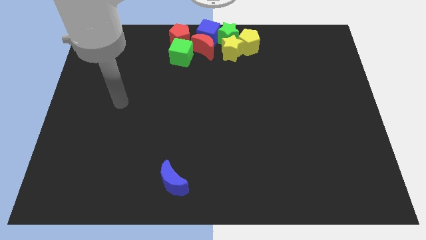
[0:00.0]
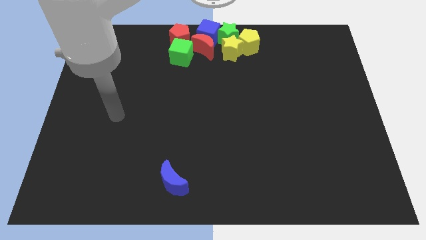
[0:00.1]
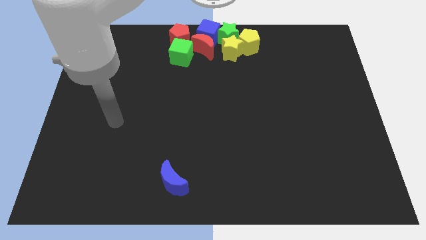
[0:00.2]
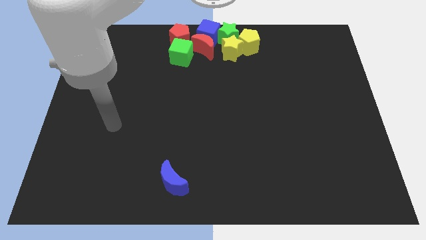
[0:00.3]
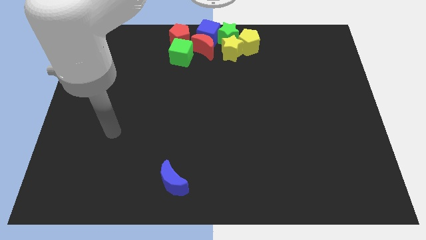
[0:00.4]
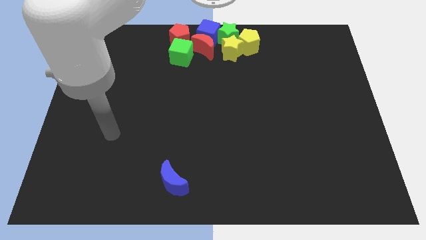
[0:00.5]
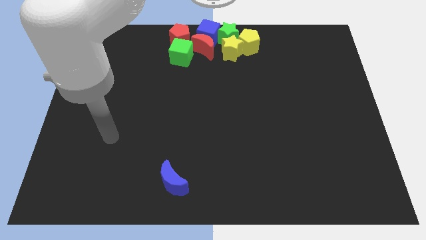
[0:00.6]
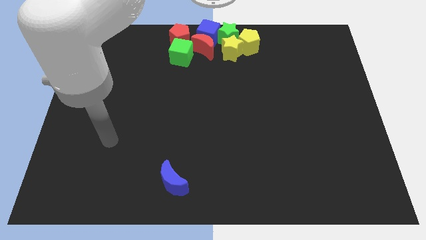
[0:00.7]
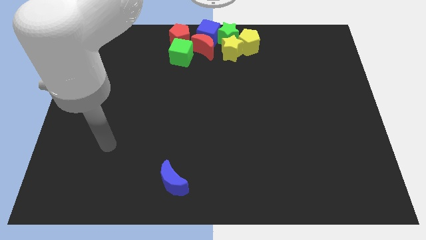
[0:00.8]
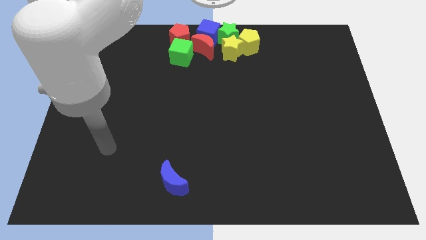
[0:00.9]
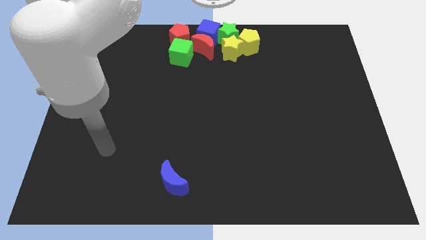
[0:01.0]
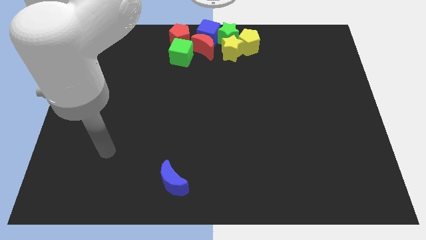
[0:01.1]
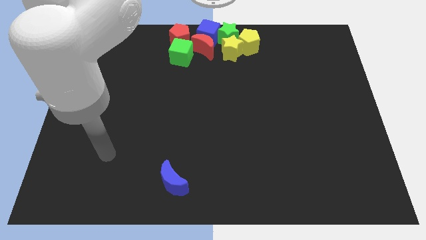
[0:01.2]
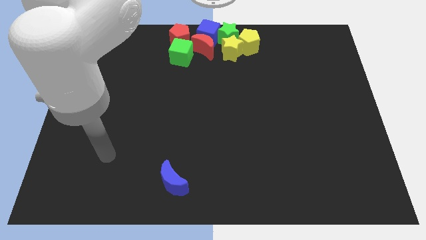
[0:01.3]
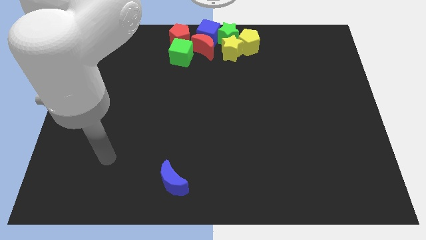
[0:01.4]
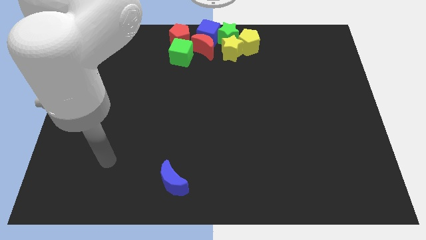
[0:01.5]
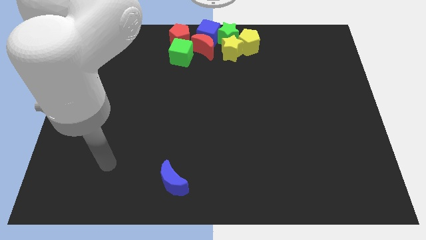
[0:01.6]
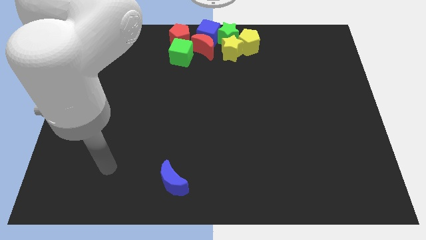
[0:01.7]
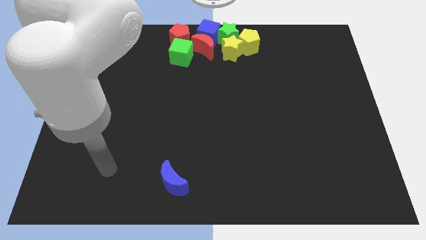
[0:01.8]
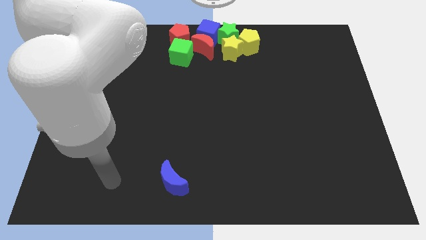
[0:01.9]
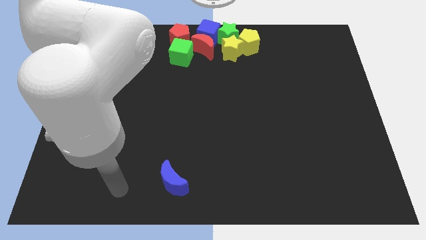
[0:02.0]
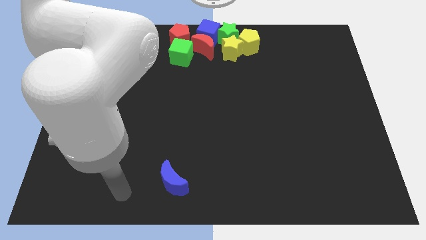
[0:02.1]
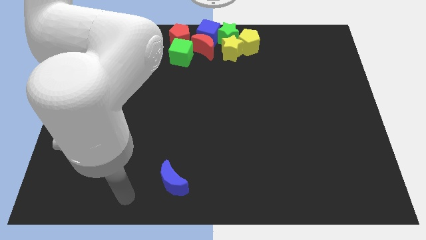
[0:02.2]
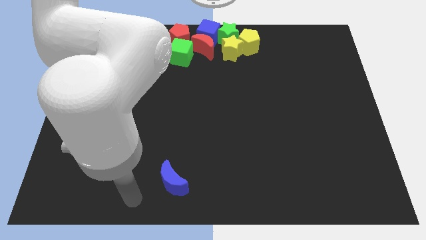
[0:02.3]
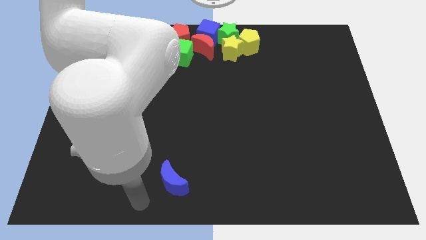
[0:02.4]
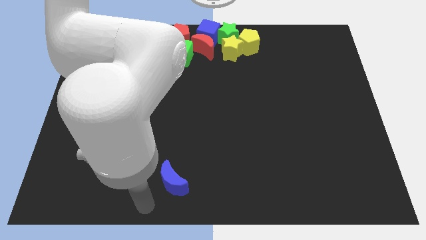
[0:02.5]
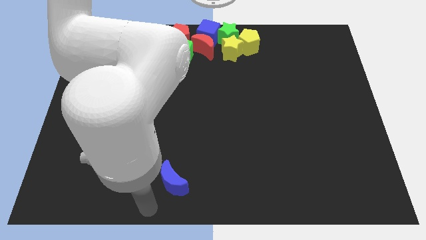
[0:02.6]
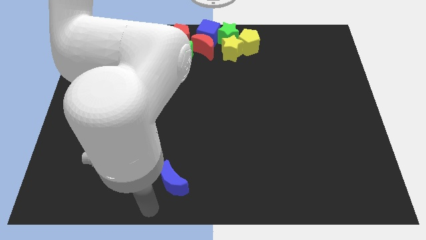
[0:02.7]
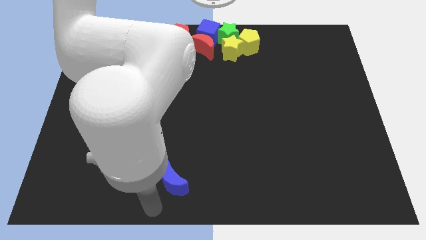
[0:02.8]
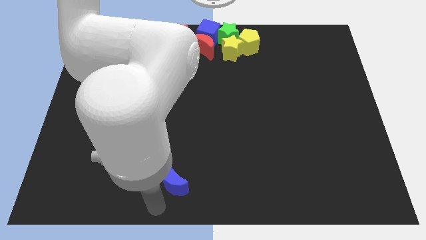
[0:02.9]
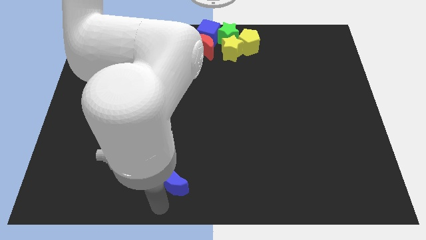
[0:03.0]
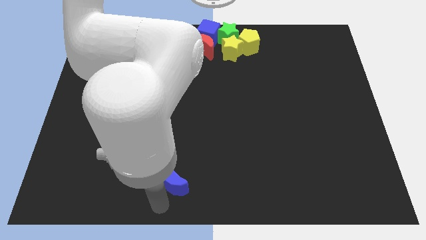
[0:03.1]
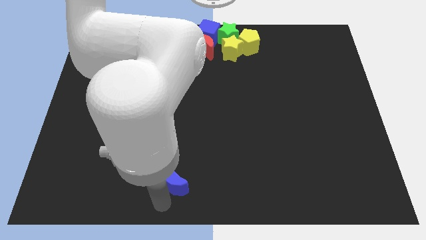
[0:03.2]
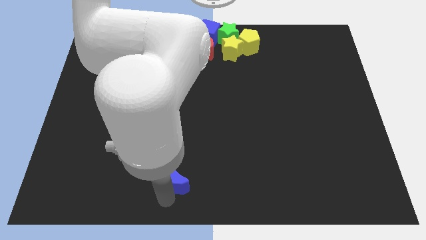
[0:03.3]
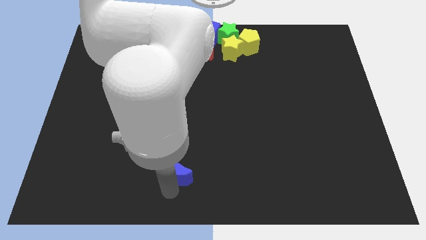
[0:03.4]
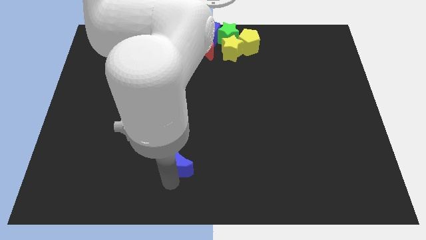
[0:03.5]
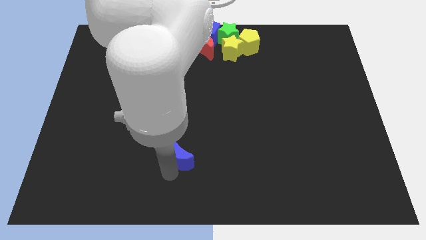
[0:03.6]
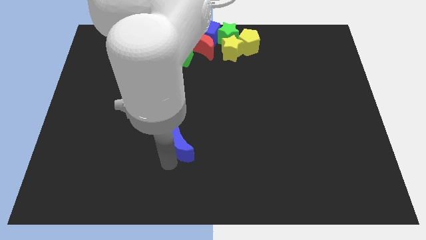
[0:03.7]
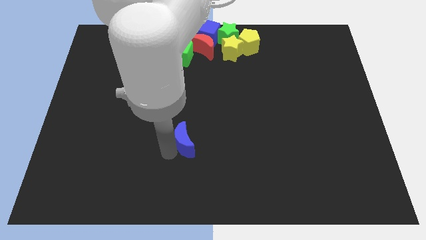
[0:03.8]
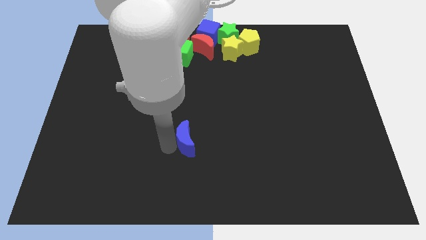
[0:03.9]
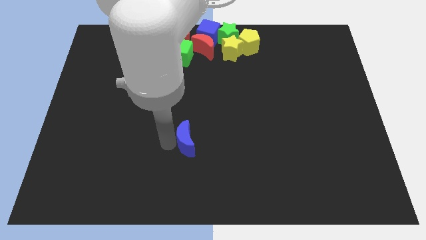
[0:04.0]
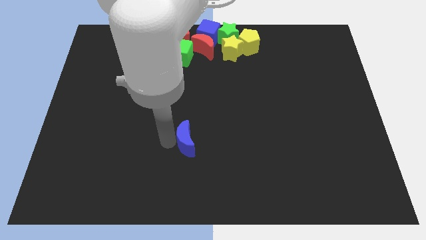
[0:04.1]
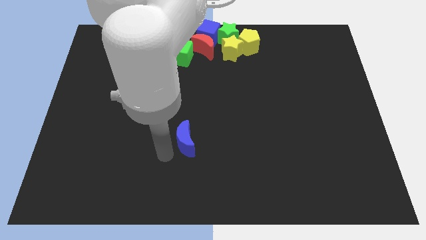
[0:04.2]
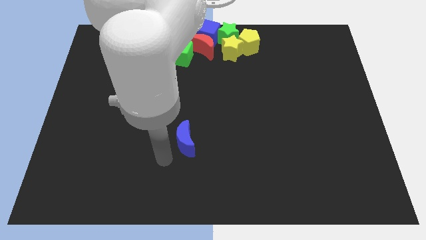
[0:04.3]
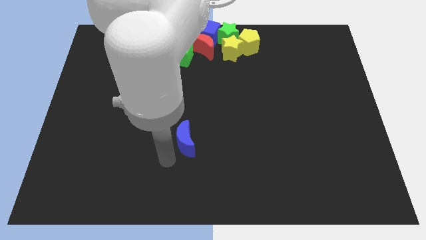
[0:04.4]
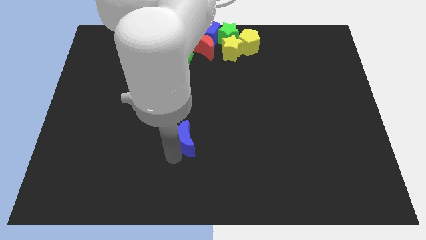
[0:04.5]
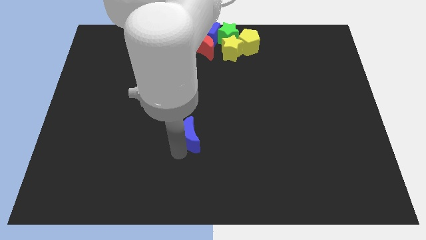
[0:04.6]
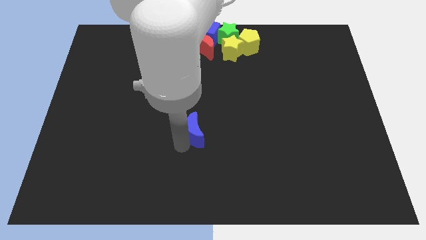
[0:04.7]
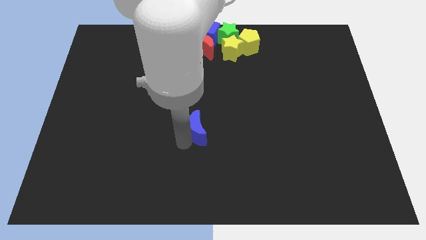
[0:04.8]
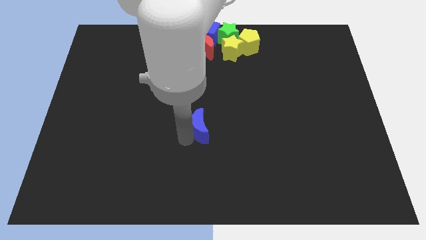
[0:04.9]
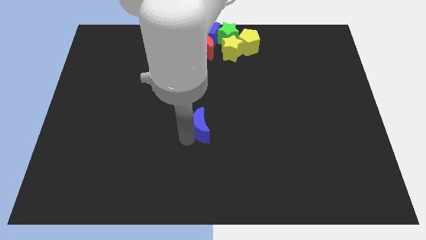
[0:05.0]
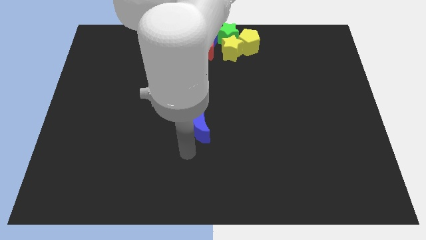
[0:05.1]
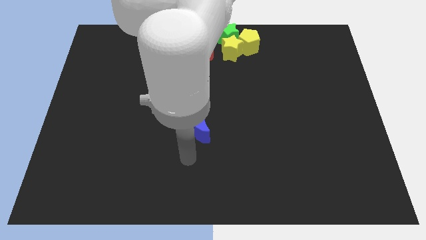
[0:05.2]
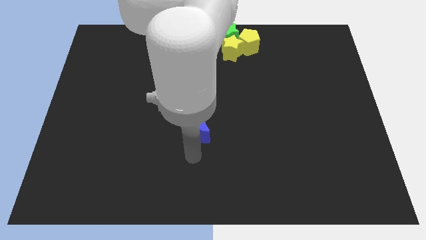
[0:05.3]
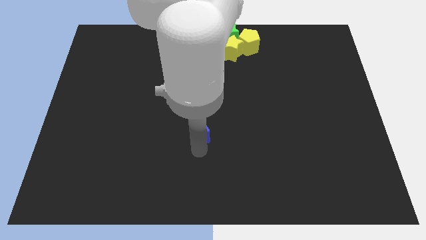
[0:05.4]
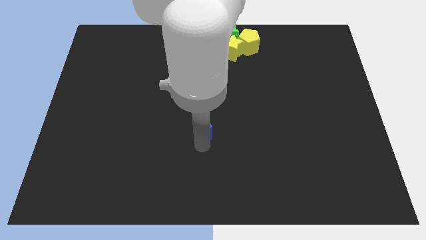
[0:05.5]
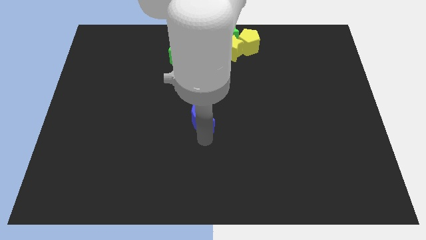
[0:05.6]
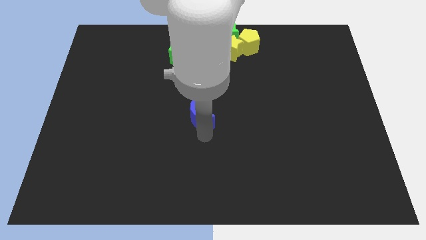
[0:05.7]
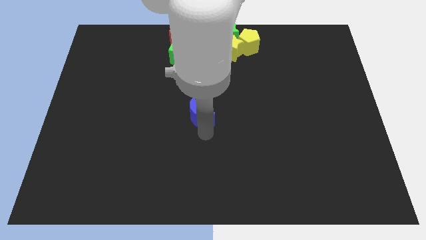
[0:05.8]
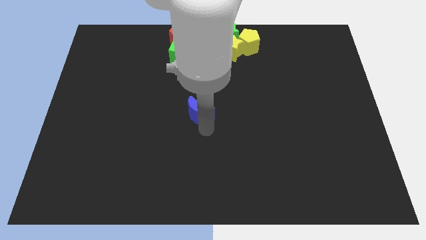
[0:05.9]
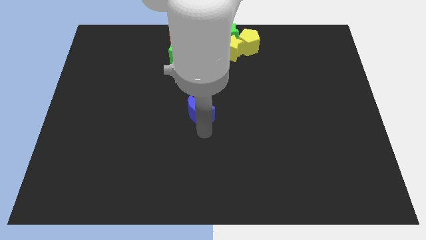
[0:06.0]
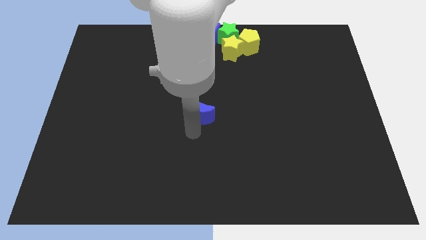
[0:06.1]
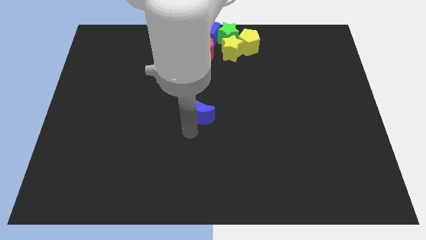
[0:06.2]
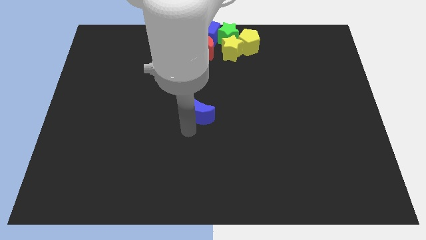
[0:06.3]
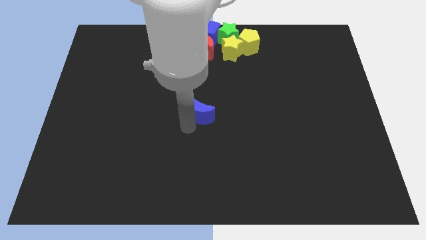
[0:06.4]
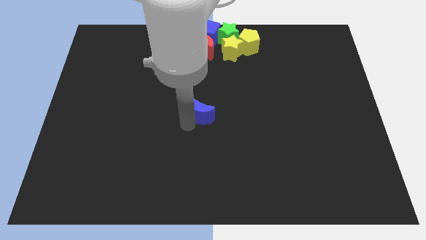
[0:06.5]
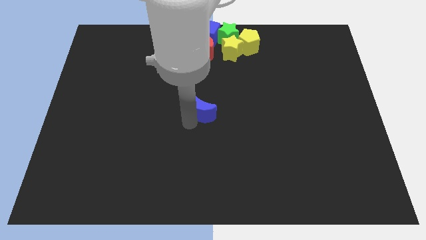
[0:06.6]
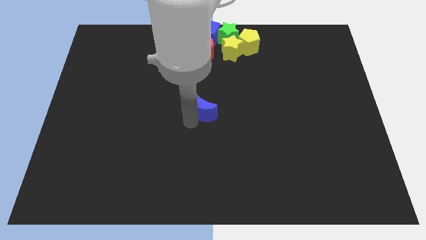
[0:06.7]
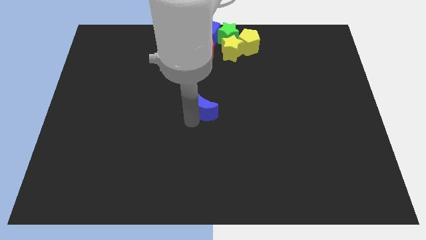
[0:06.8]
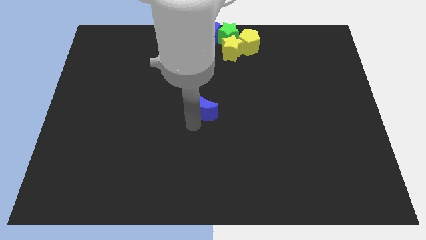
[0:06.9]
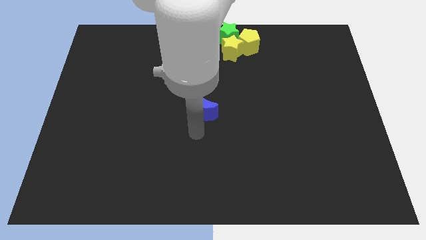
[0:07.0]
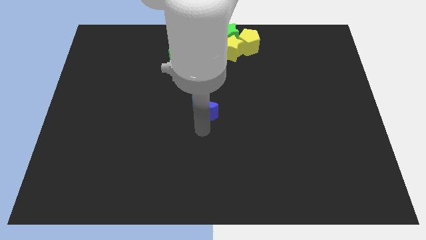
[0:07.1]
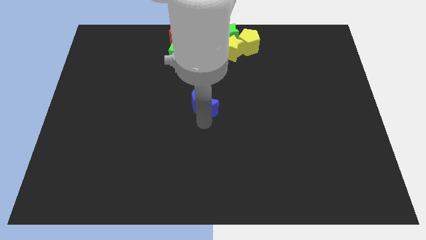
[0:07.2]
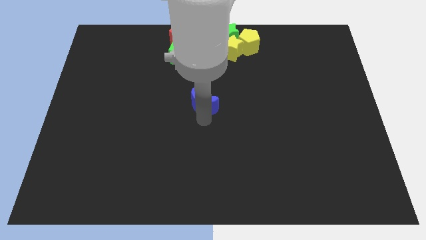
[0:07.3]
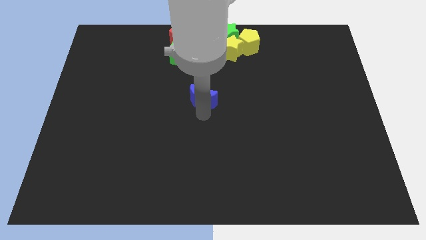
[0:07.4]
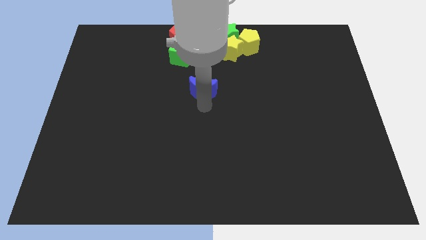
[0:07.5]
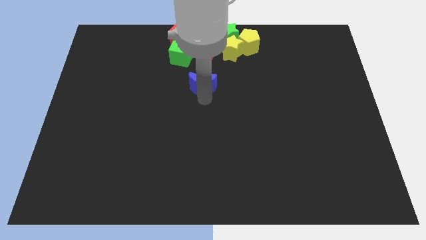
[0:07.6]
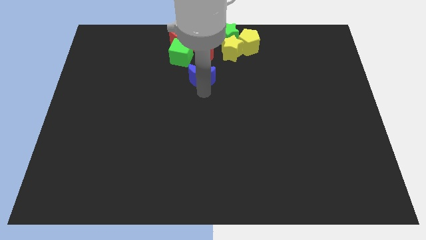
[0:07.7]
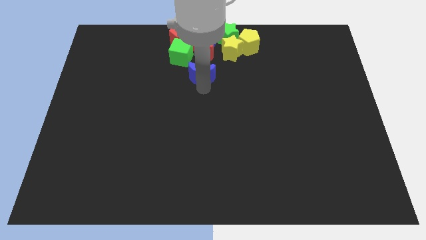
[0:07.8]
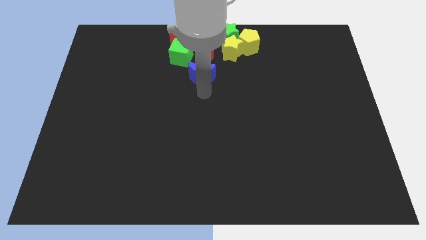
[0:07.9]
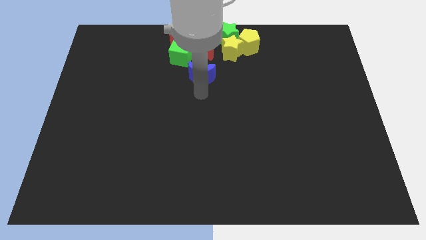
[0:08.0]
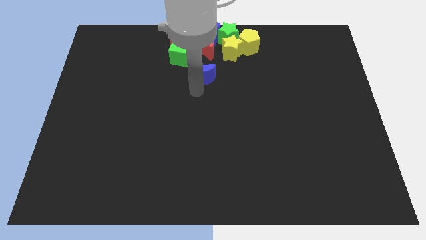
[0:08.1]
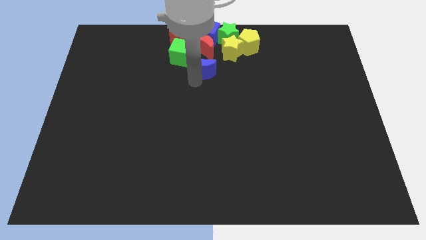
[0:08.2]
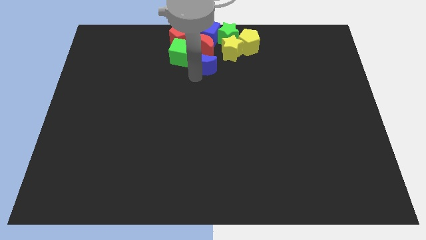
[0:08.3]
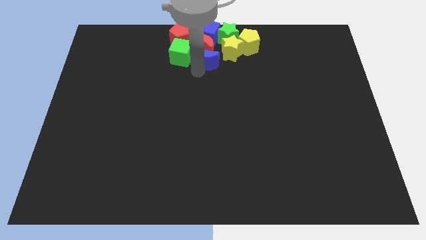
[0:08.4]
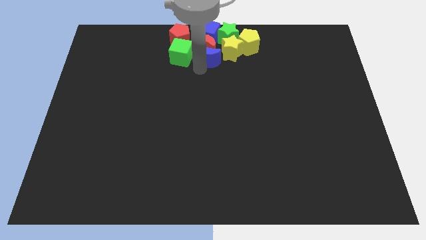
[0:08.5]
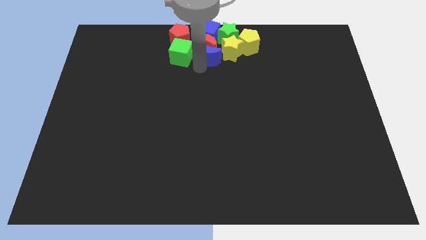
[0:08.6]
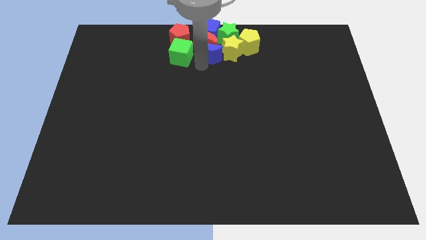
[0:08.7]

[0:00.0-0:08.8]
push the blue crescent into the red crescent
